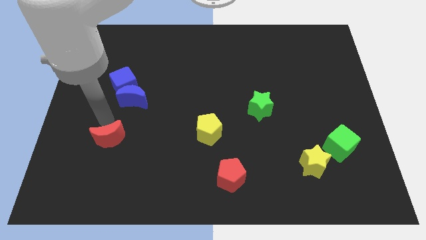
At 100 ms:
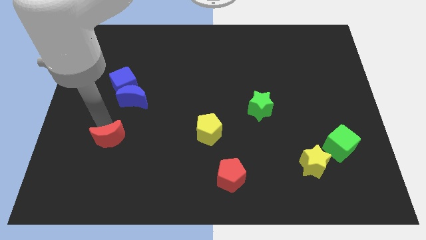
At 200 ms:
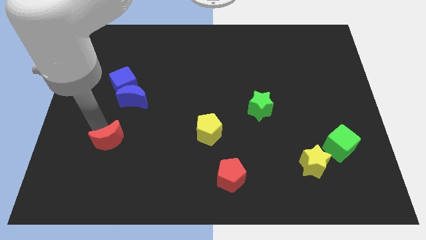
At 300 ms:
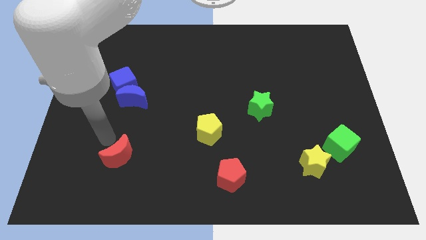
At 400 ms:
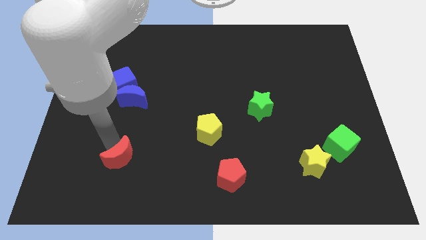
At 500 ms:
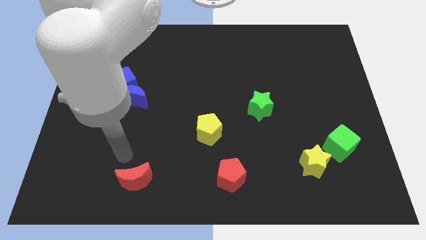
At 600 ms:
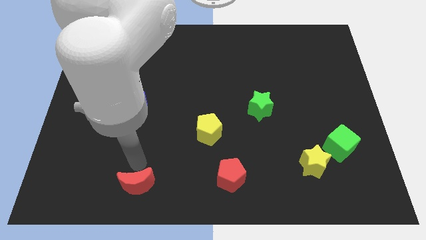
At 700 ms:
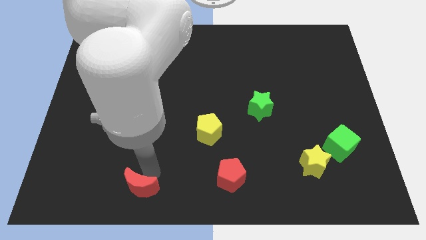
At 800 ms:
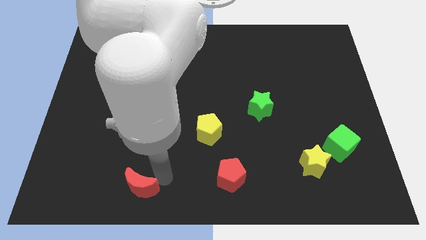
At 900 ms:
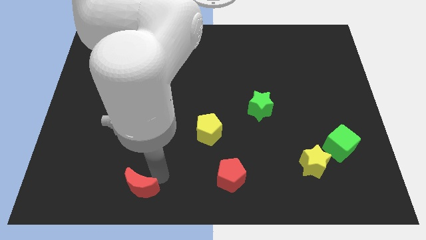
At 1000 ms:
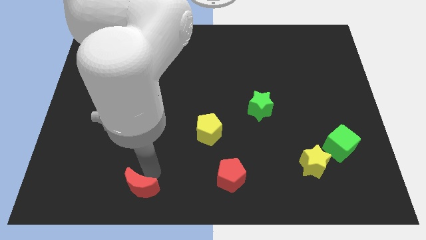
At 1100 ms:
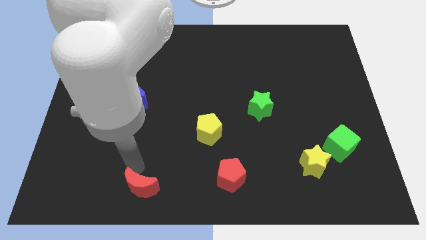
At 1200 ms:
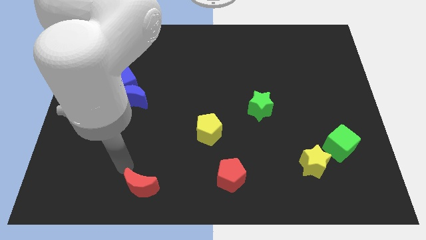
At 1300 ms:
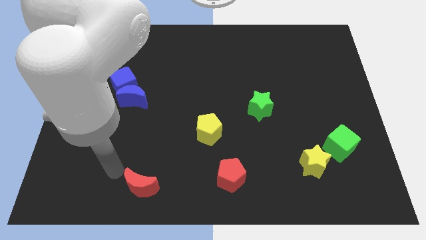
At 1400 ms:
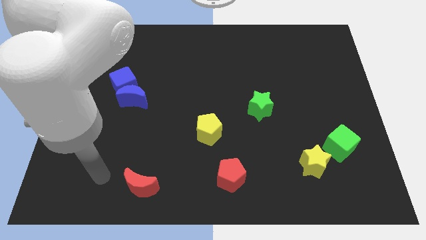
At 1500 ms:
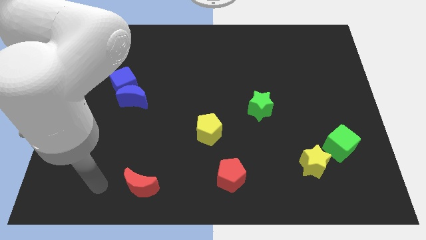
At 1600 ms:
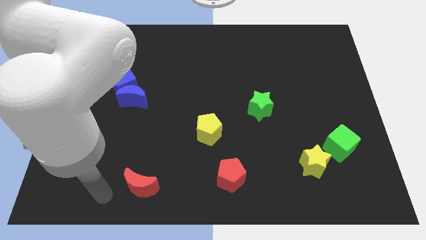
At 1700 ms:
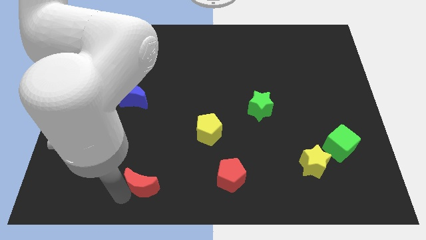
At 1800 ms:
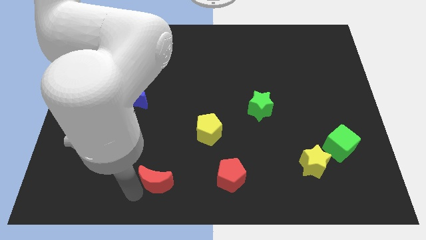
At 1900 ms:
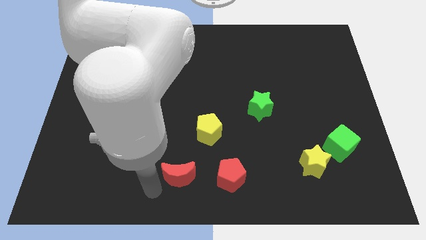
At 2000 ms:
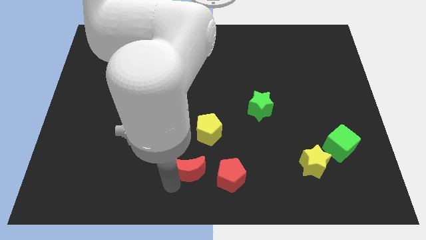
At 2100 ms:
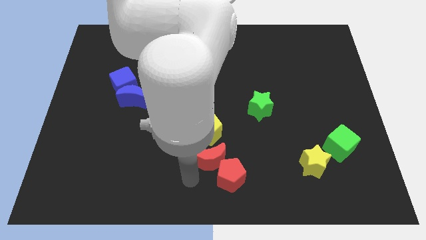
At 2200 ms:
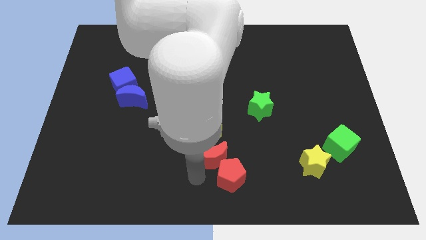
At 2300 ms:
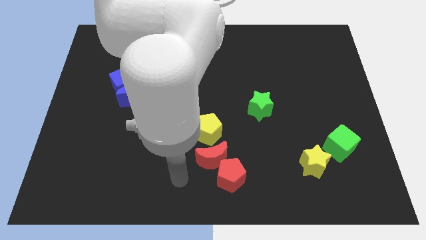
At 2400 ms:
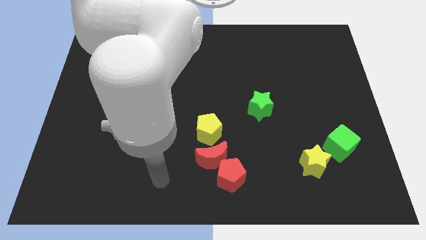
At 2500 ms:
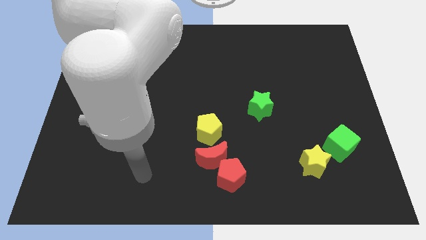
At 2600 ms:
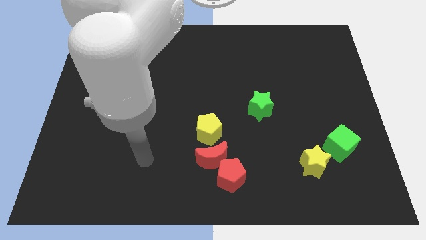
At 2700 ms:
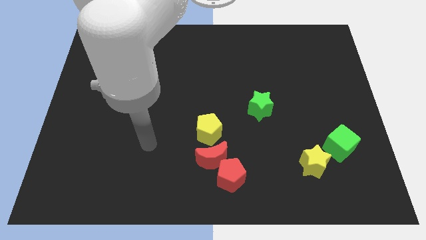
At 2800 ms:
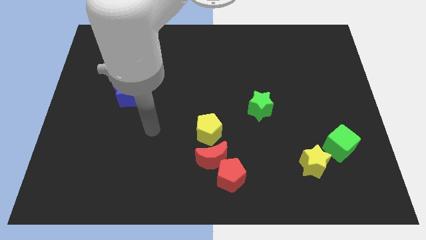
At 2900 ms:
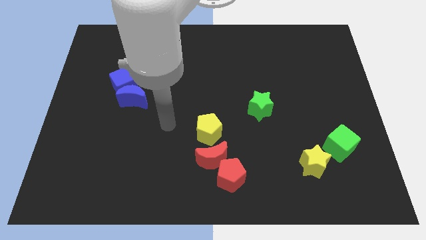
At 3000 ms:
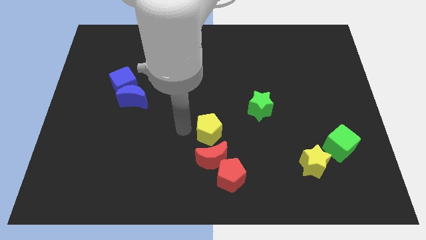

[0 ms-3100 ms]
place red moon in between red and yellow pentagons

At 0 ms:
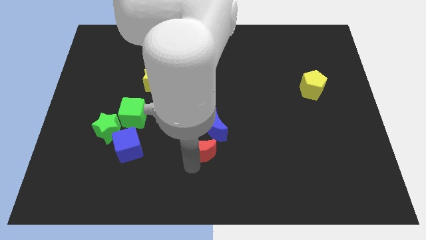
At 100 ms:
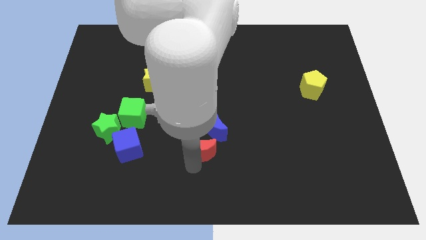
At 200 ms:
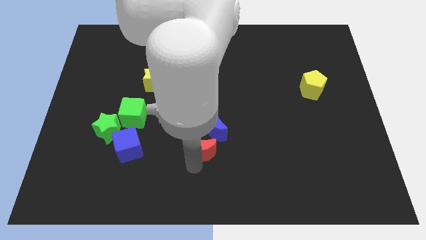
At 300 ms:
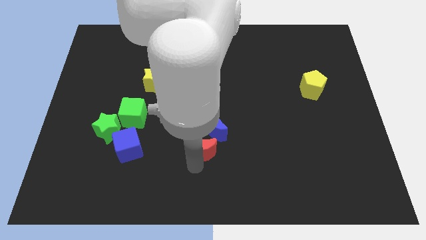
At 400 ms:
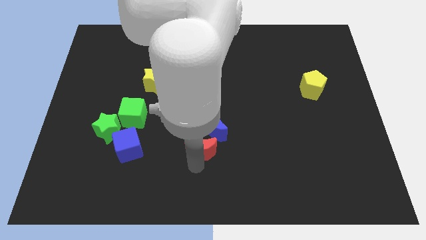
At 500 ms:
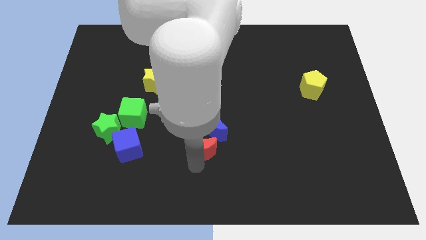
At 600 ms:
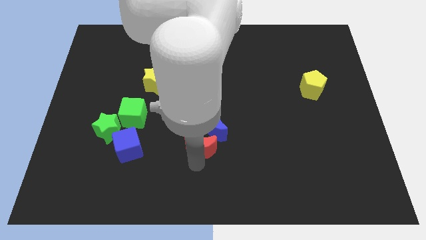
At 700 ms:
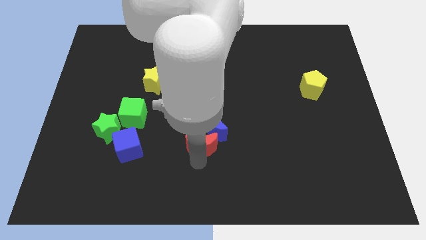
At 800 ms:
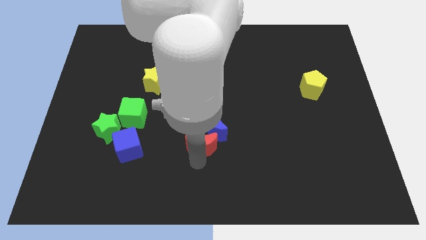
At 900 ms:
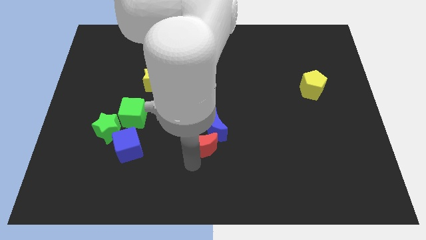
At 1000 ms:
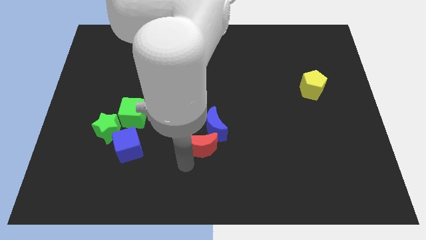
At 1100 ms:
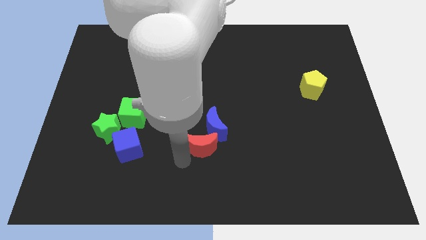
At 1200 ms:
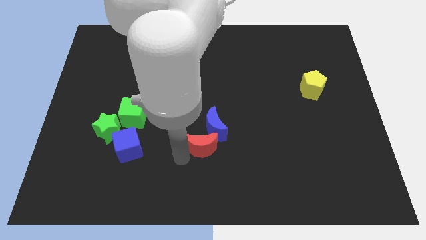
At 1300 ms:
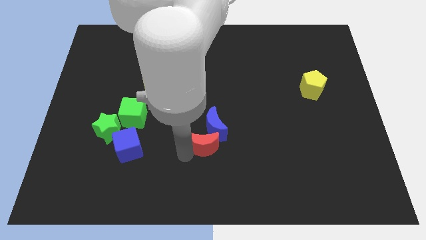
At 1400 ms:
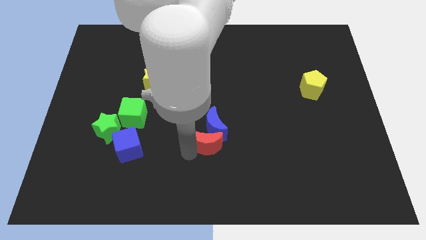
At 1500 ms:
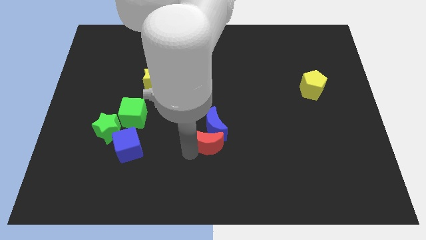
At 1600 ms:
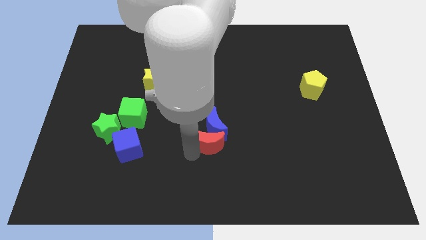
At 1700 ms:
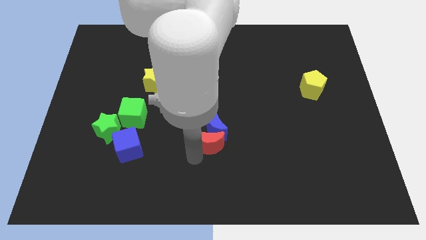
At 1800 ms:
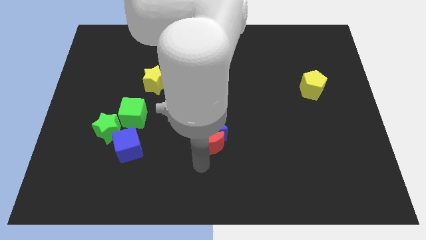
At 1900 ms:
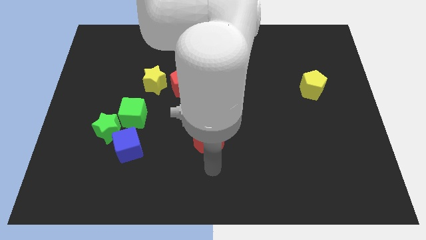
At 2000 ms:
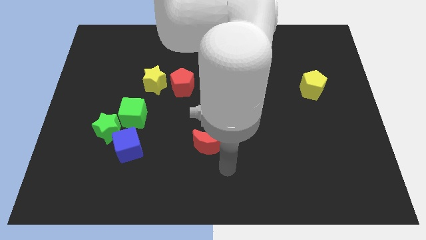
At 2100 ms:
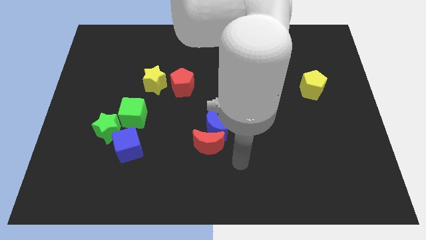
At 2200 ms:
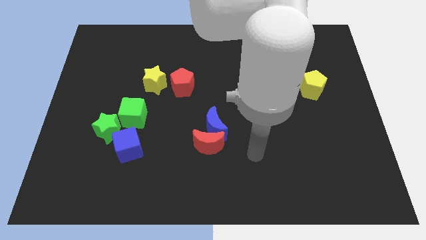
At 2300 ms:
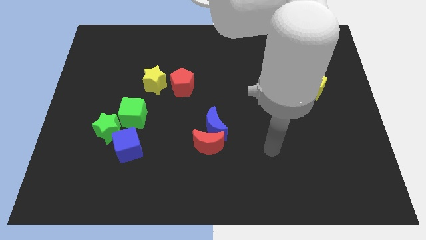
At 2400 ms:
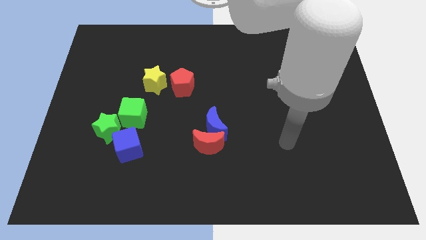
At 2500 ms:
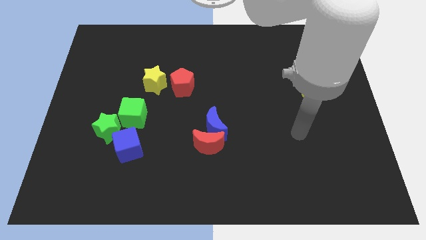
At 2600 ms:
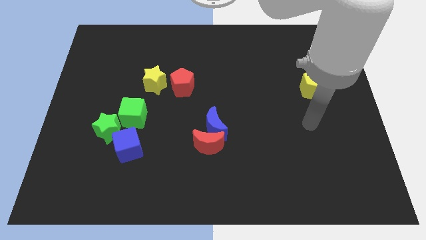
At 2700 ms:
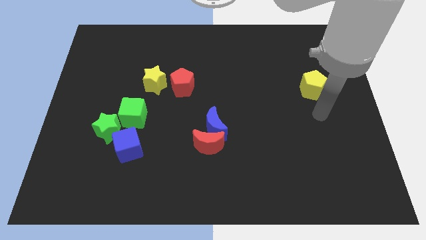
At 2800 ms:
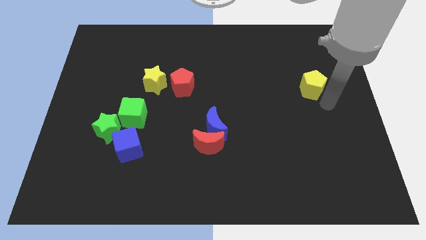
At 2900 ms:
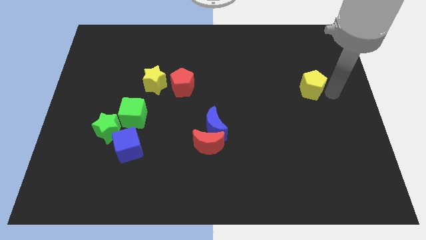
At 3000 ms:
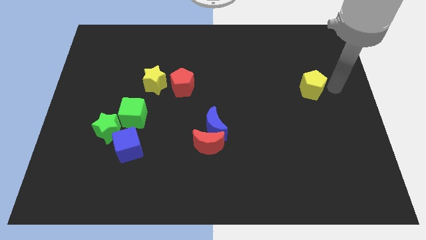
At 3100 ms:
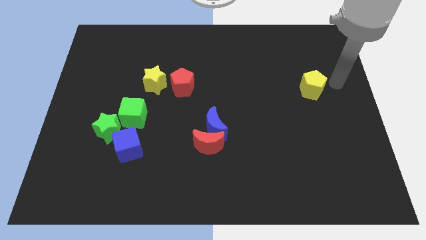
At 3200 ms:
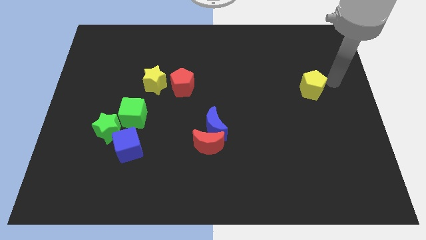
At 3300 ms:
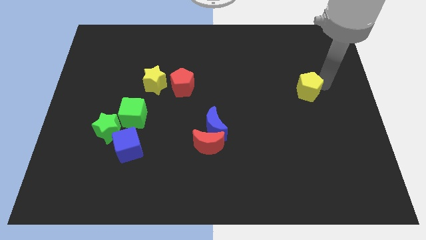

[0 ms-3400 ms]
move your arm to the right side of the yellow pentagon

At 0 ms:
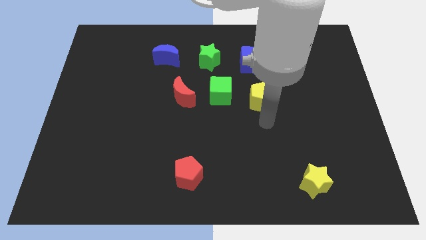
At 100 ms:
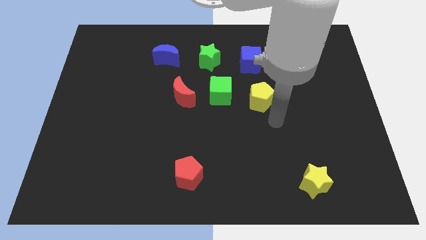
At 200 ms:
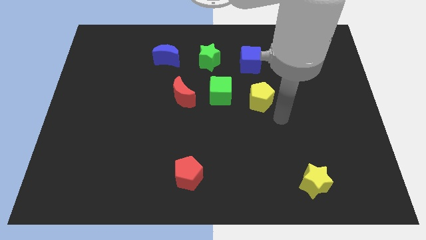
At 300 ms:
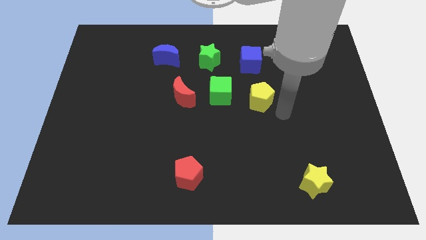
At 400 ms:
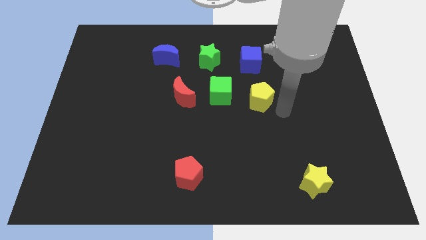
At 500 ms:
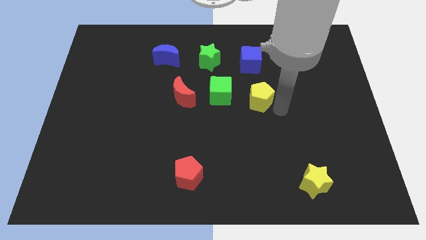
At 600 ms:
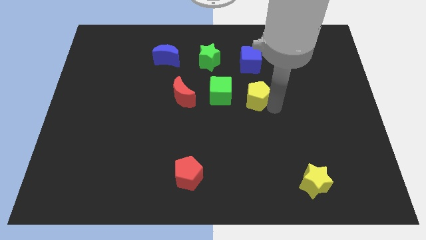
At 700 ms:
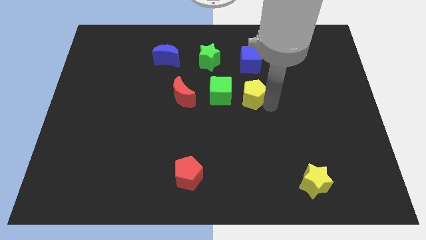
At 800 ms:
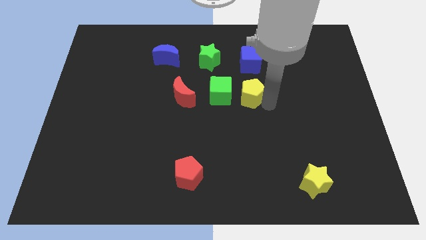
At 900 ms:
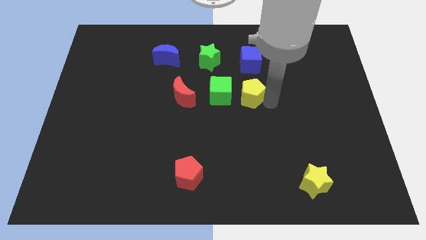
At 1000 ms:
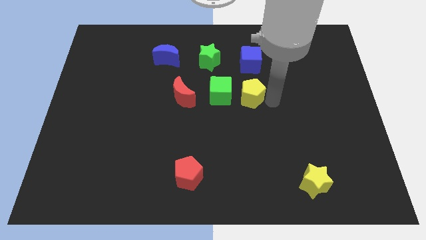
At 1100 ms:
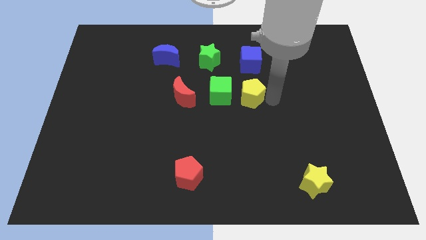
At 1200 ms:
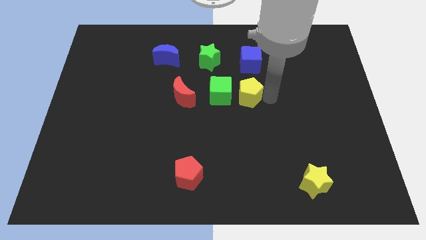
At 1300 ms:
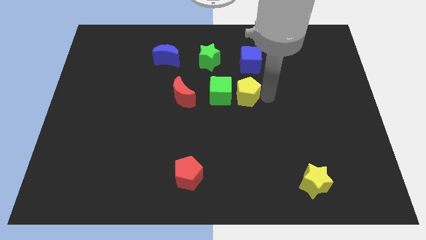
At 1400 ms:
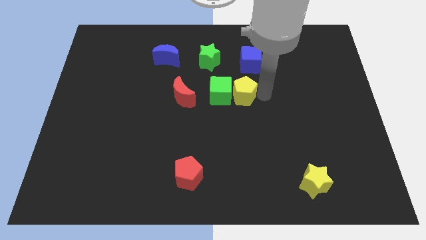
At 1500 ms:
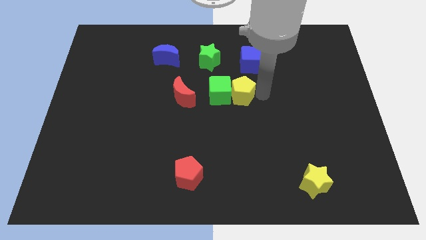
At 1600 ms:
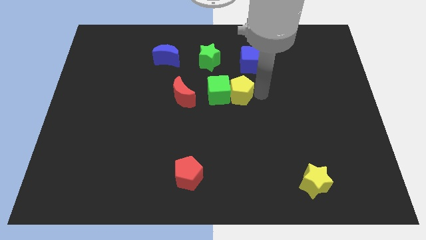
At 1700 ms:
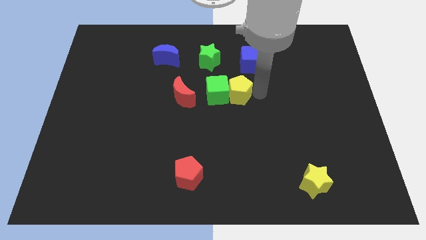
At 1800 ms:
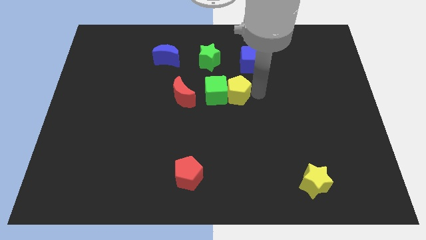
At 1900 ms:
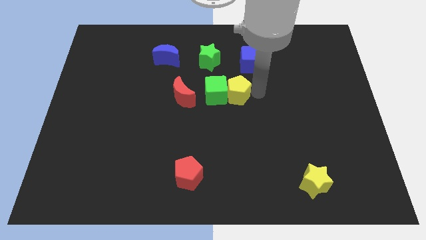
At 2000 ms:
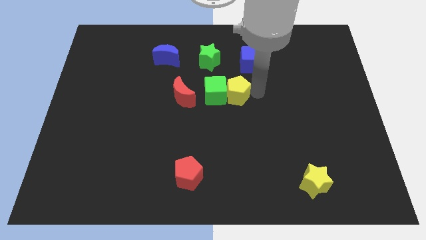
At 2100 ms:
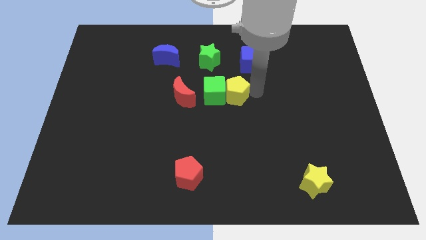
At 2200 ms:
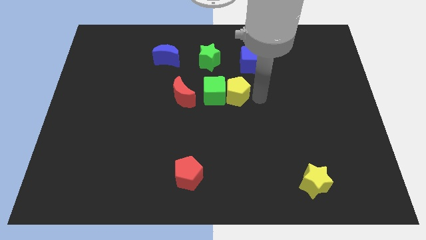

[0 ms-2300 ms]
push the yellow pentagon into the green cube

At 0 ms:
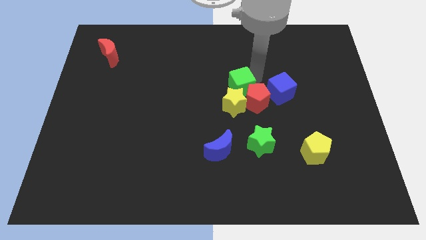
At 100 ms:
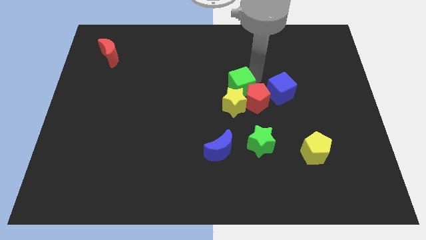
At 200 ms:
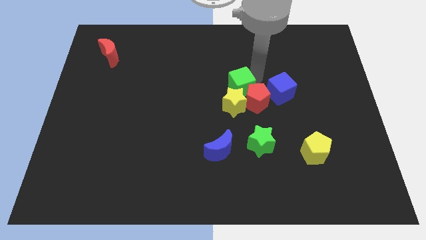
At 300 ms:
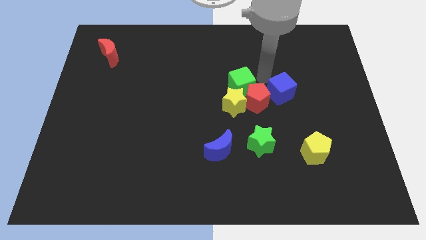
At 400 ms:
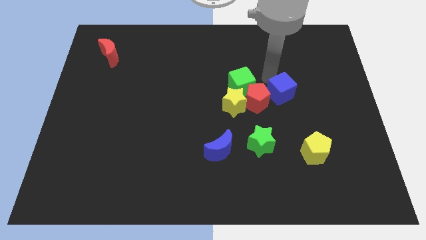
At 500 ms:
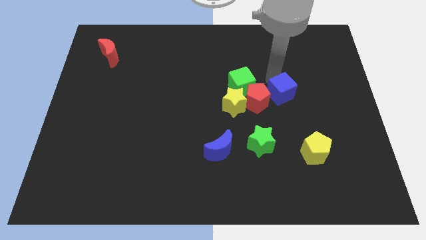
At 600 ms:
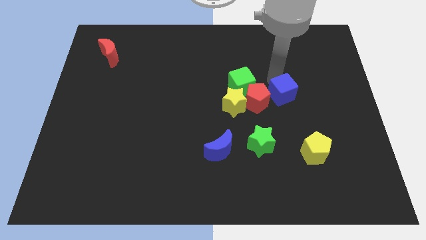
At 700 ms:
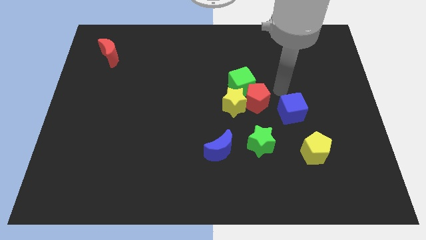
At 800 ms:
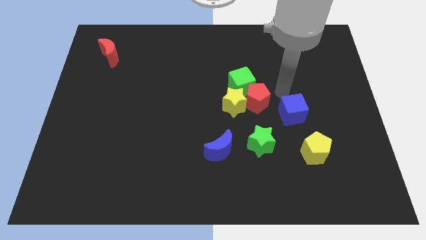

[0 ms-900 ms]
move the arm away from the green cube
